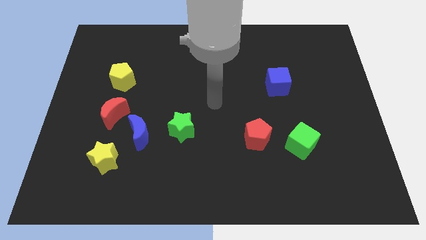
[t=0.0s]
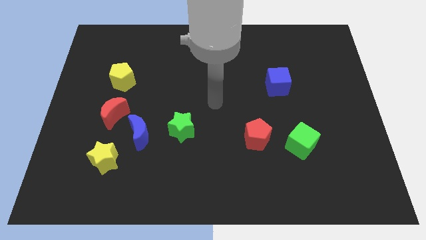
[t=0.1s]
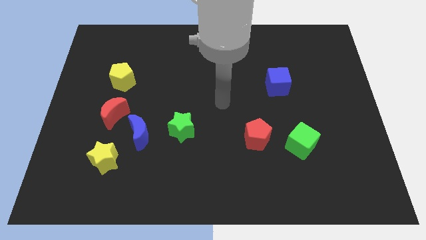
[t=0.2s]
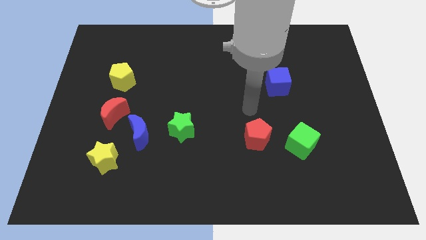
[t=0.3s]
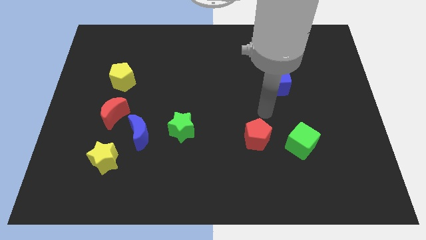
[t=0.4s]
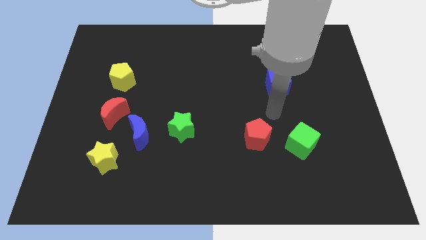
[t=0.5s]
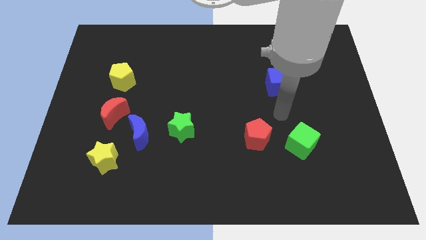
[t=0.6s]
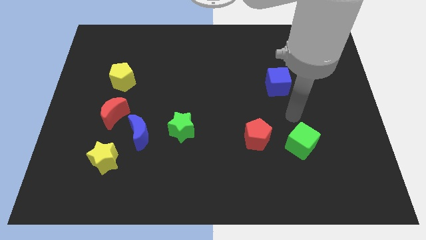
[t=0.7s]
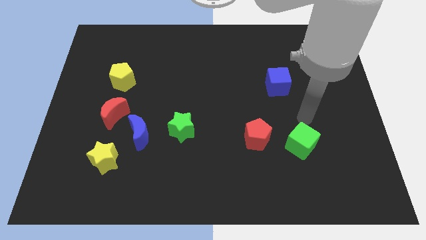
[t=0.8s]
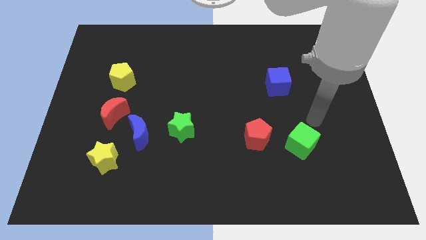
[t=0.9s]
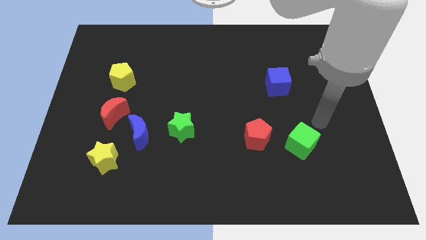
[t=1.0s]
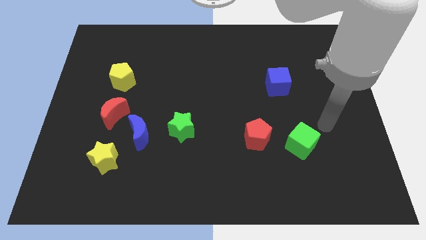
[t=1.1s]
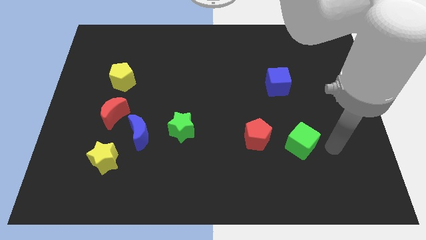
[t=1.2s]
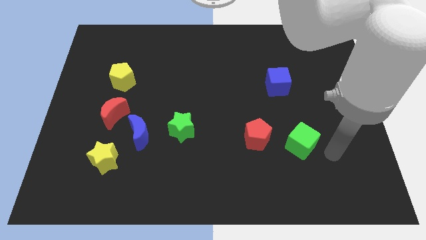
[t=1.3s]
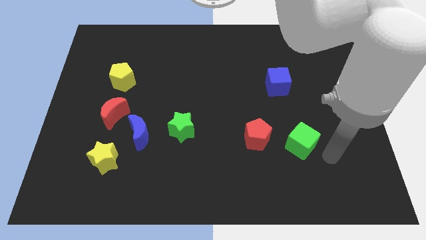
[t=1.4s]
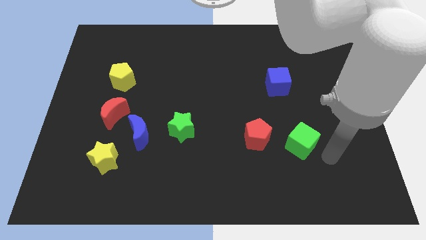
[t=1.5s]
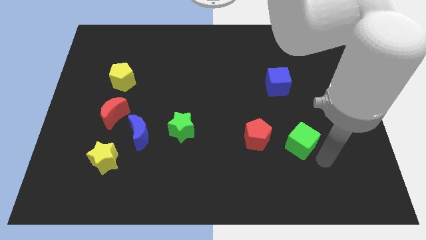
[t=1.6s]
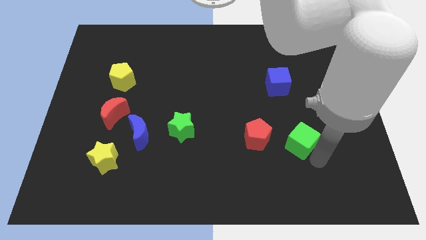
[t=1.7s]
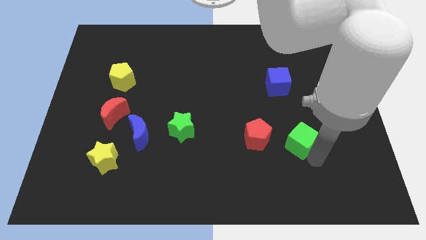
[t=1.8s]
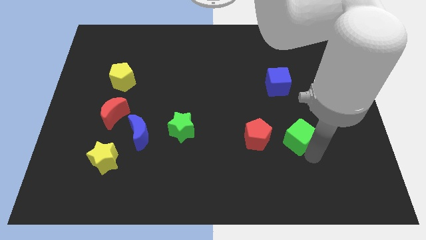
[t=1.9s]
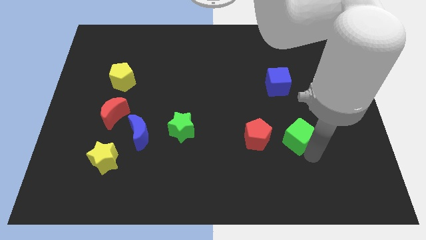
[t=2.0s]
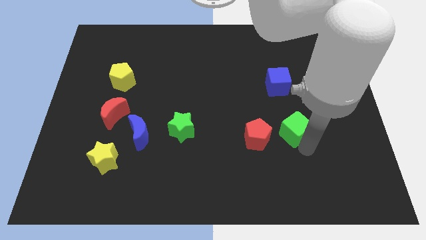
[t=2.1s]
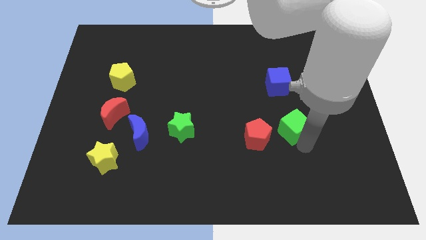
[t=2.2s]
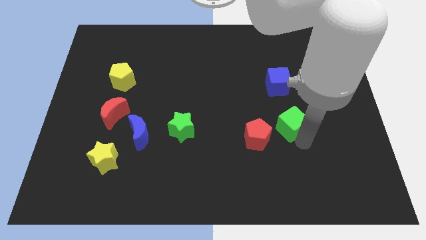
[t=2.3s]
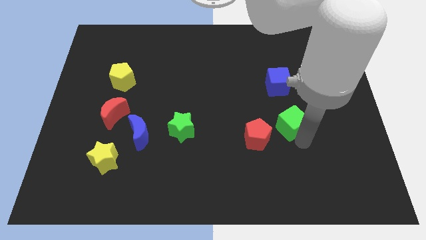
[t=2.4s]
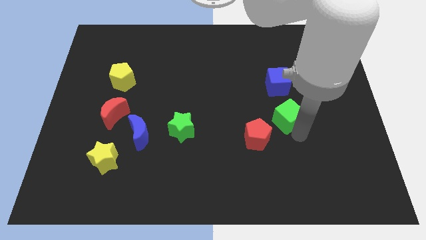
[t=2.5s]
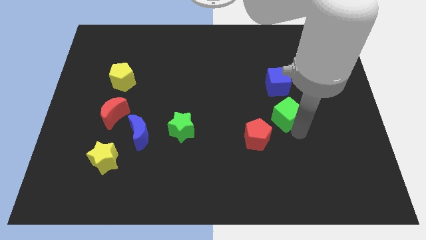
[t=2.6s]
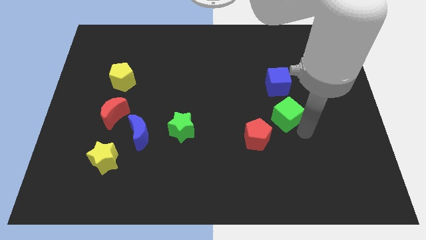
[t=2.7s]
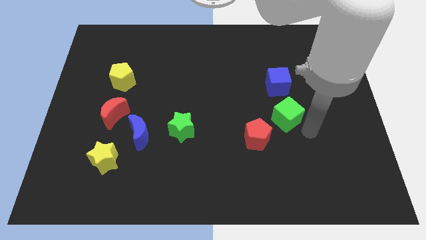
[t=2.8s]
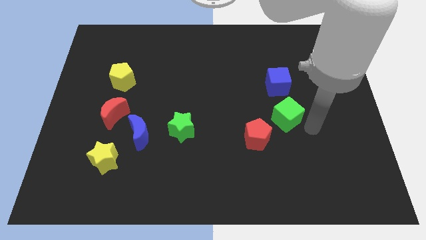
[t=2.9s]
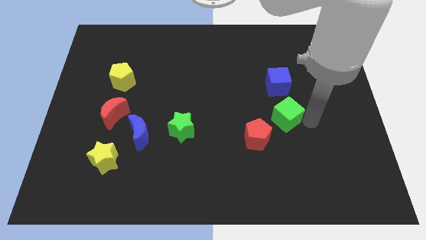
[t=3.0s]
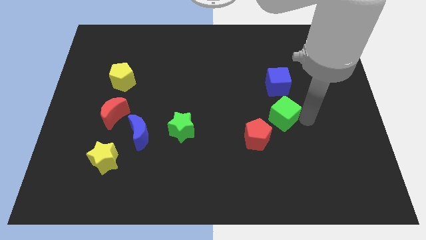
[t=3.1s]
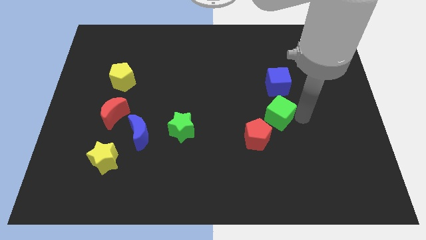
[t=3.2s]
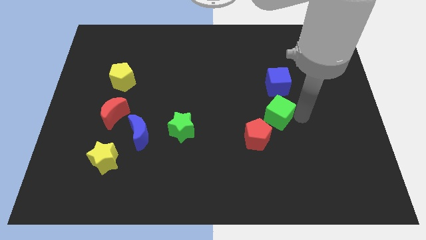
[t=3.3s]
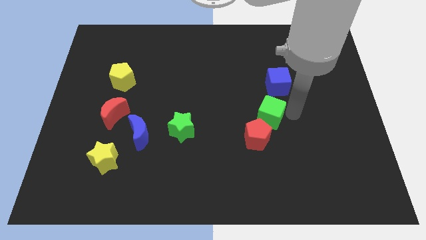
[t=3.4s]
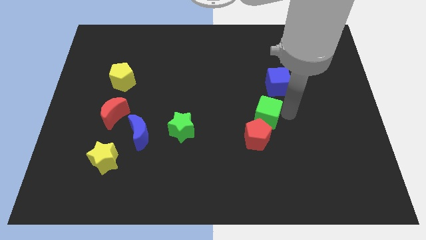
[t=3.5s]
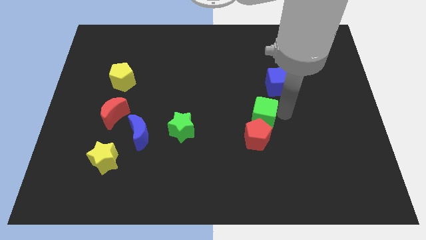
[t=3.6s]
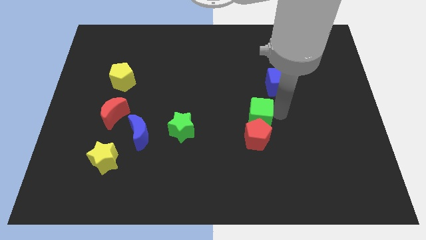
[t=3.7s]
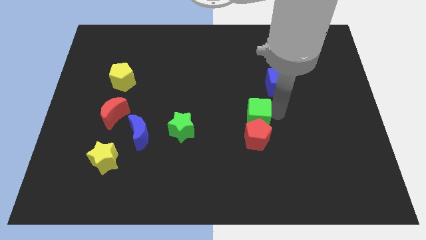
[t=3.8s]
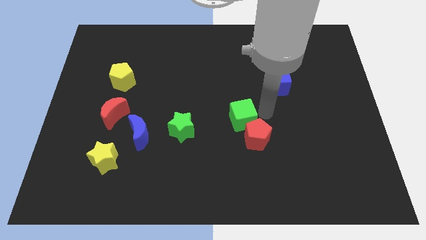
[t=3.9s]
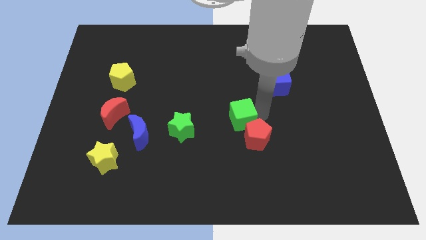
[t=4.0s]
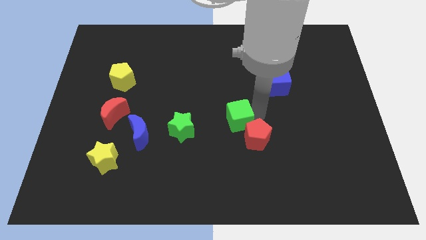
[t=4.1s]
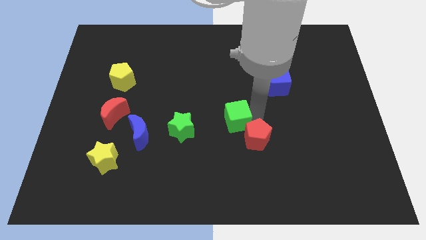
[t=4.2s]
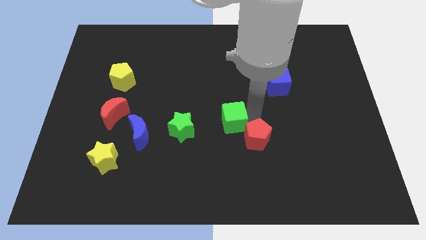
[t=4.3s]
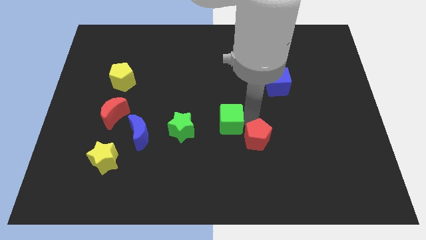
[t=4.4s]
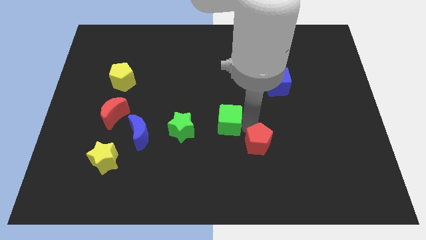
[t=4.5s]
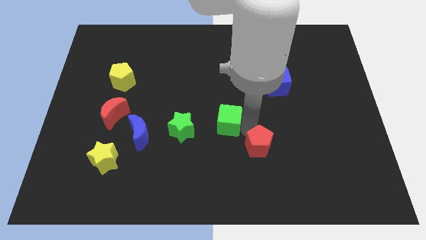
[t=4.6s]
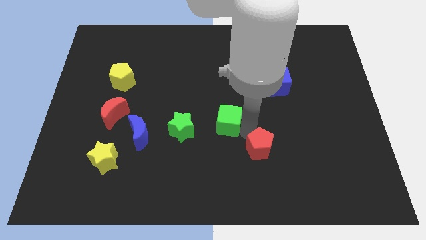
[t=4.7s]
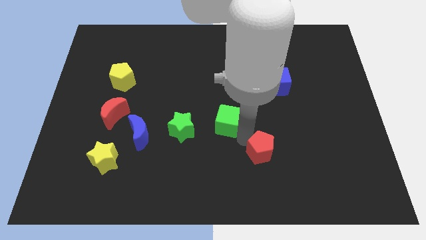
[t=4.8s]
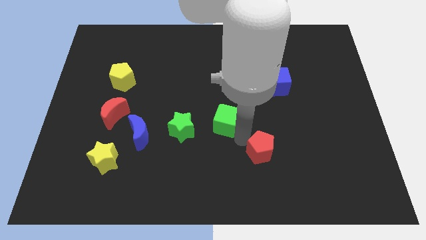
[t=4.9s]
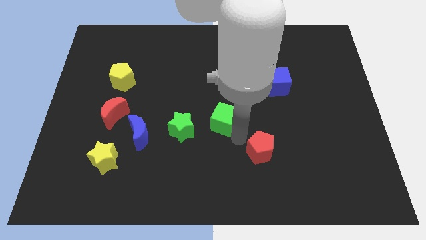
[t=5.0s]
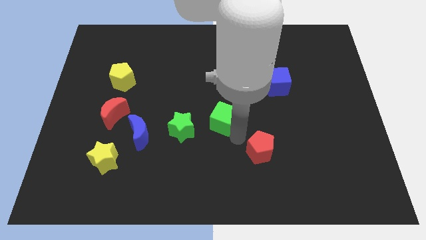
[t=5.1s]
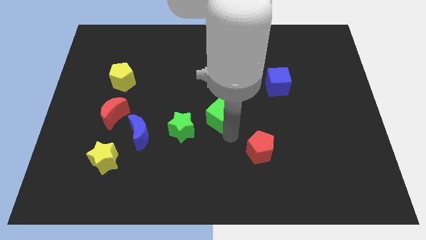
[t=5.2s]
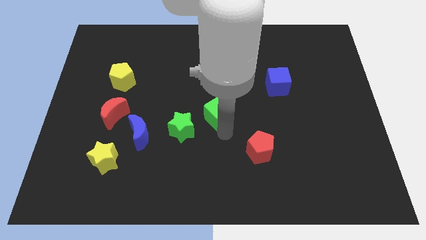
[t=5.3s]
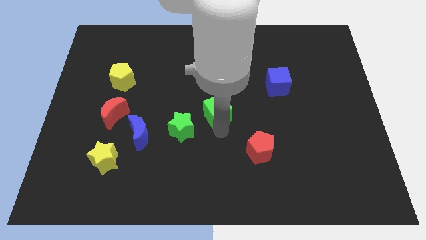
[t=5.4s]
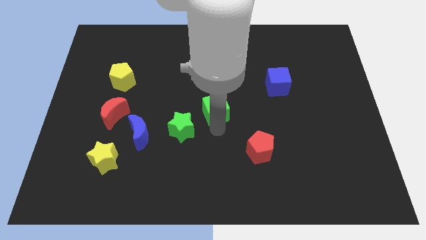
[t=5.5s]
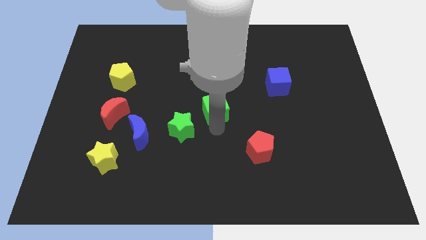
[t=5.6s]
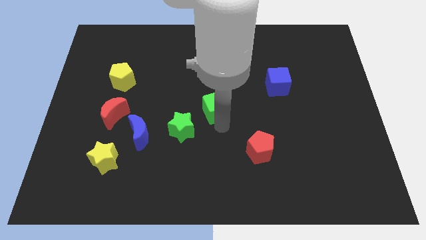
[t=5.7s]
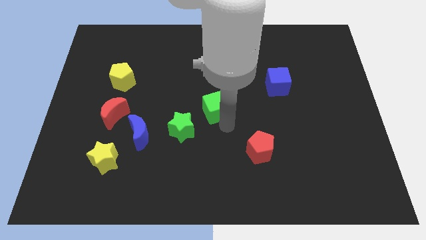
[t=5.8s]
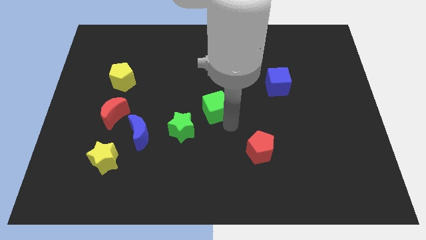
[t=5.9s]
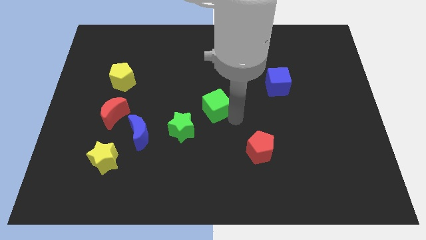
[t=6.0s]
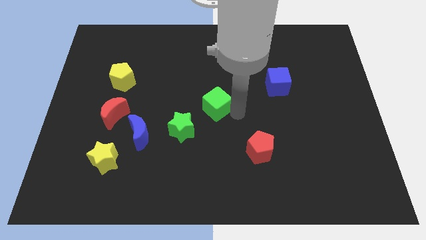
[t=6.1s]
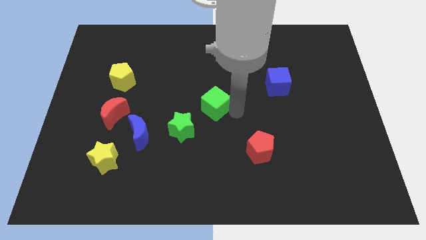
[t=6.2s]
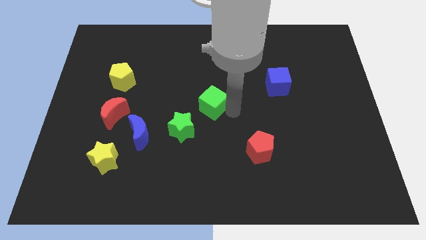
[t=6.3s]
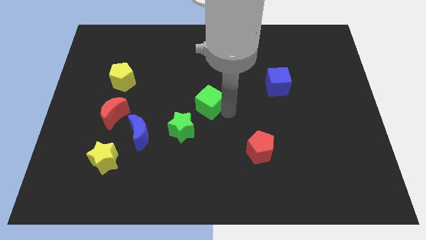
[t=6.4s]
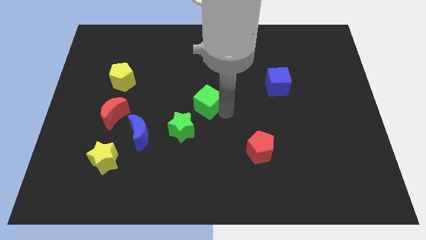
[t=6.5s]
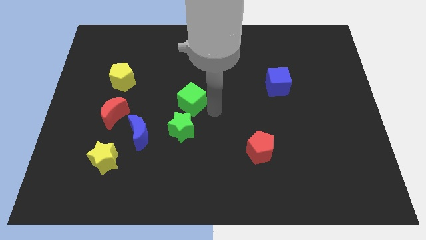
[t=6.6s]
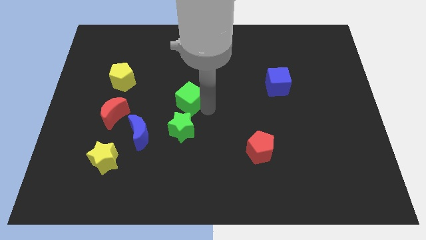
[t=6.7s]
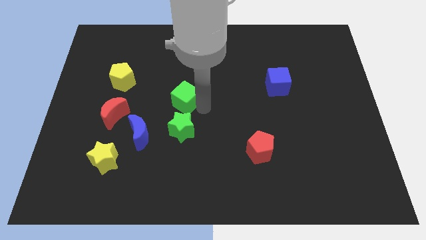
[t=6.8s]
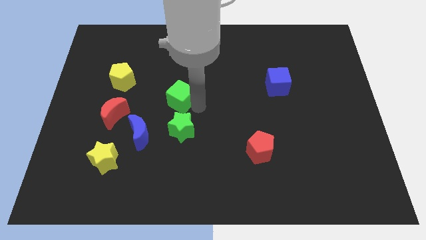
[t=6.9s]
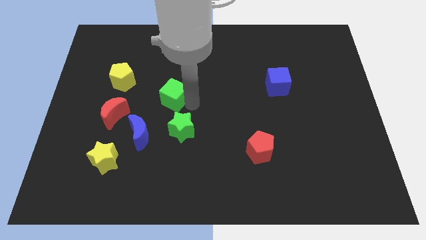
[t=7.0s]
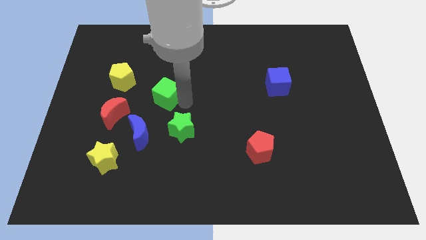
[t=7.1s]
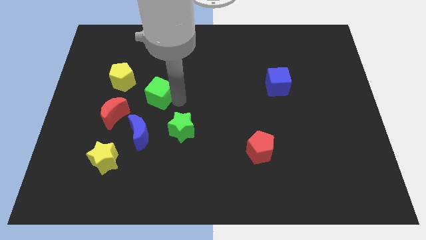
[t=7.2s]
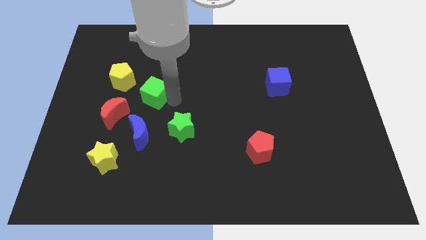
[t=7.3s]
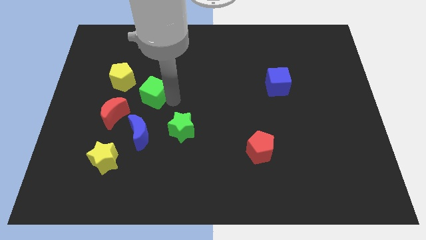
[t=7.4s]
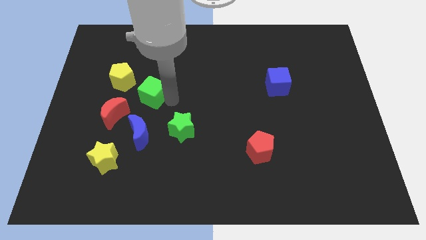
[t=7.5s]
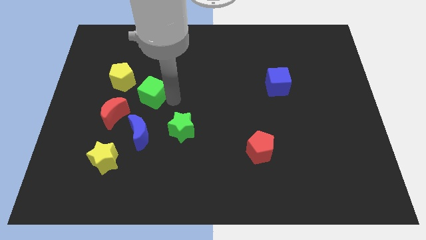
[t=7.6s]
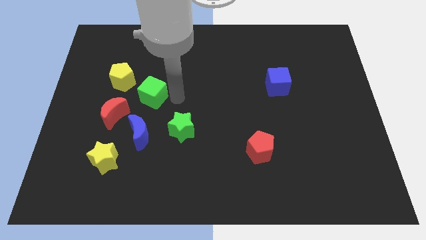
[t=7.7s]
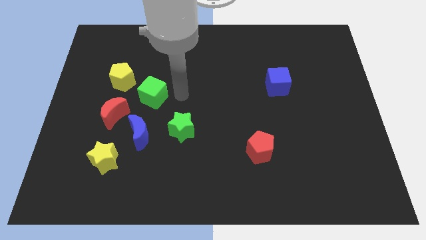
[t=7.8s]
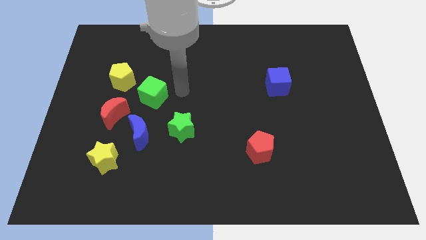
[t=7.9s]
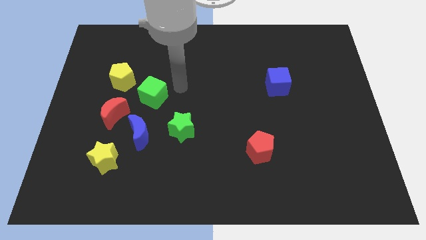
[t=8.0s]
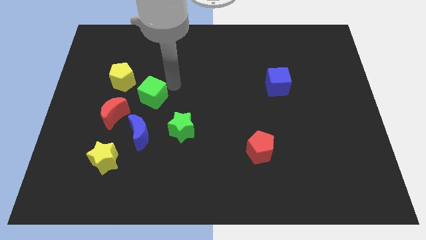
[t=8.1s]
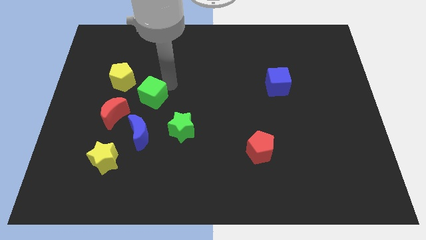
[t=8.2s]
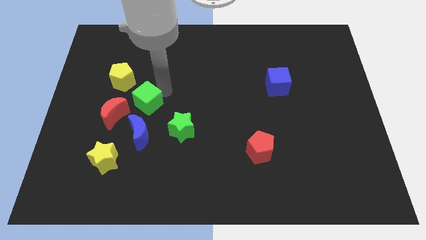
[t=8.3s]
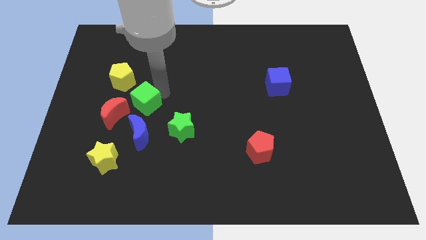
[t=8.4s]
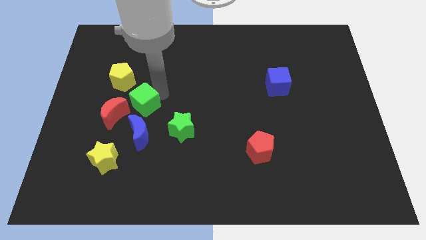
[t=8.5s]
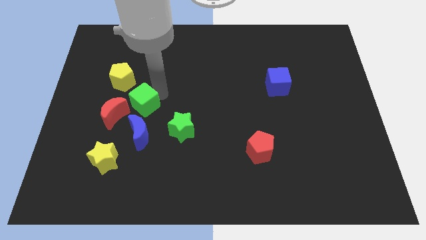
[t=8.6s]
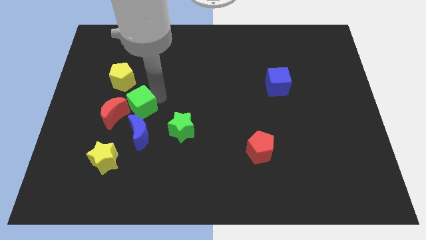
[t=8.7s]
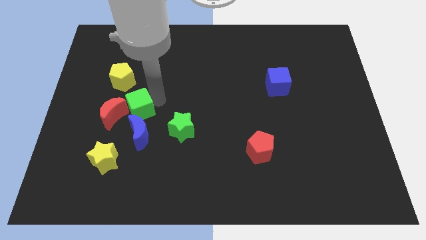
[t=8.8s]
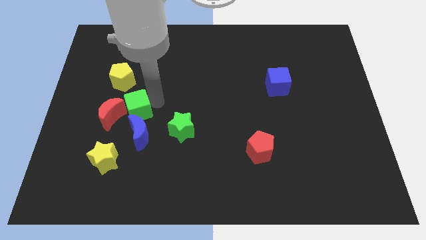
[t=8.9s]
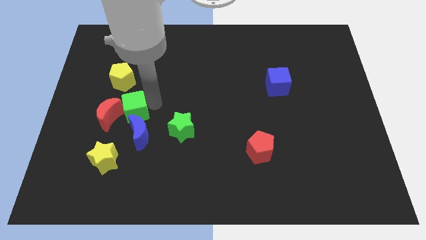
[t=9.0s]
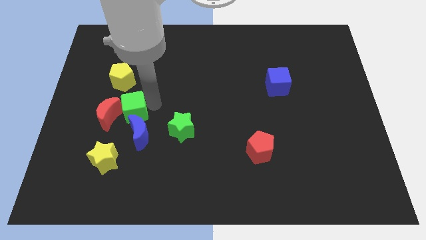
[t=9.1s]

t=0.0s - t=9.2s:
put the green cube close to the red moon
